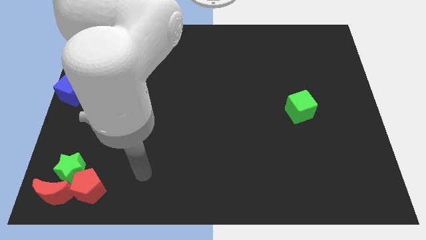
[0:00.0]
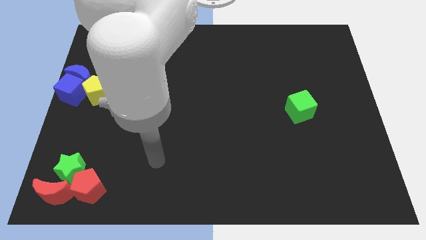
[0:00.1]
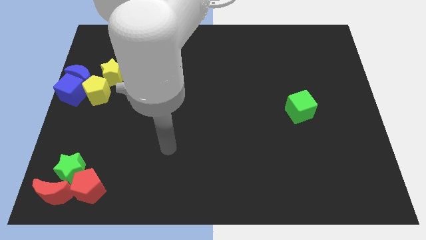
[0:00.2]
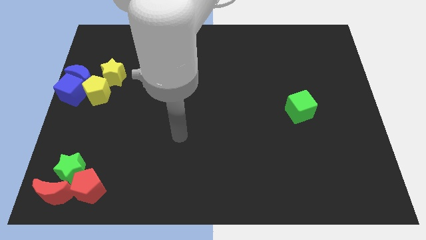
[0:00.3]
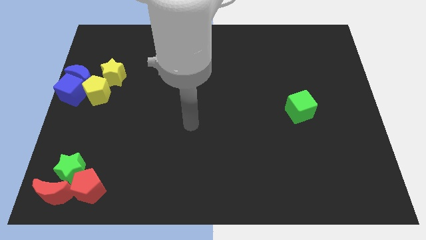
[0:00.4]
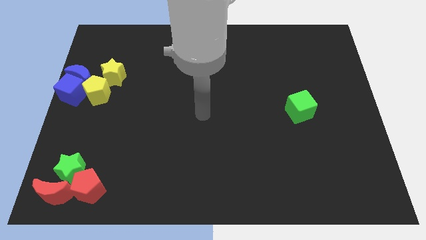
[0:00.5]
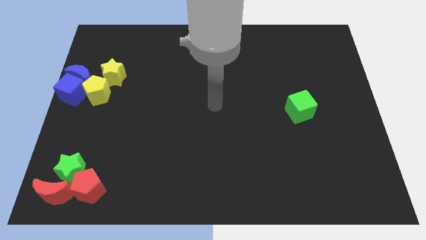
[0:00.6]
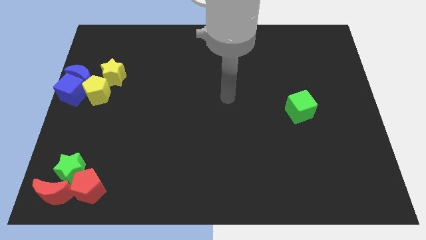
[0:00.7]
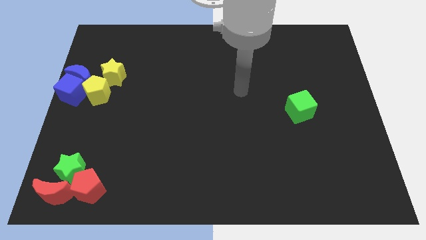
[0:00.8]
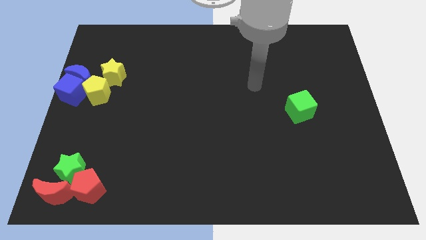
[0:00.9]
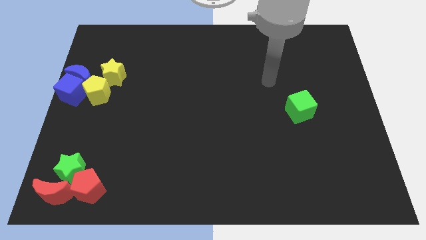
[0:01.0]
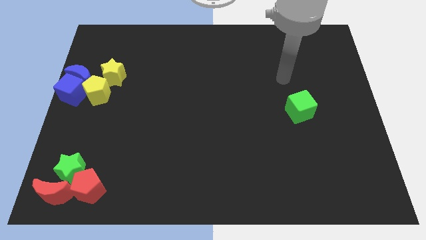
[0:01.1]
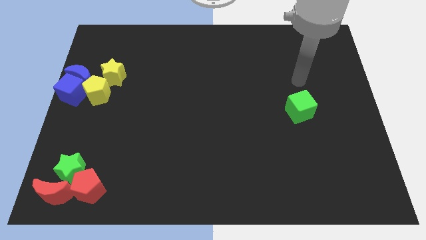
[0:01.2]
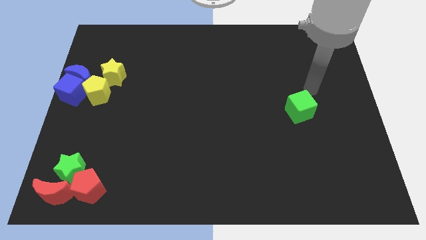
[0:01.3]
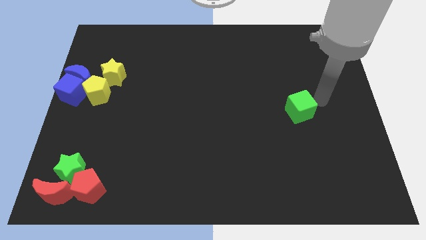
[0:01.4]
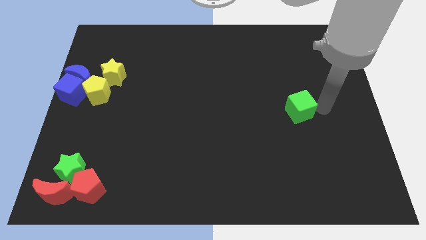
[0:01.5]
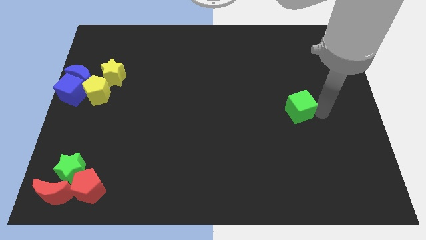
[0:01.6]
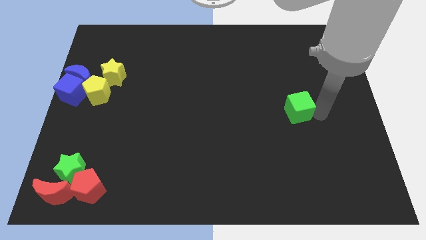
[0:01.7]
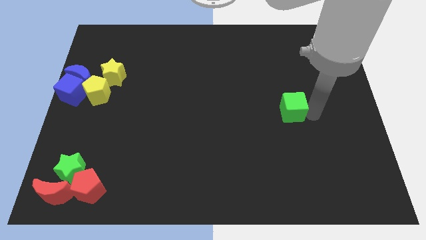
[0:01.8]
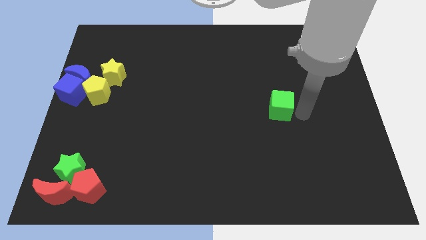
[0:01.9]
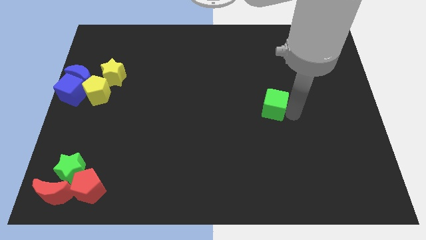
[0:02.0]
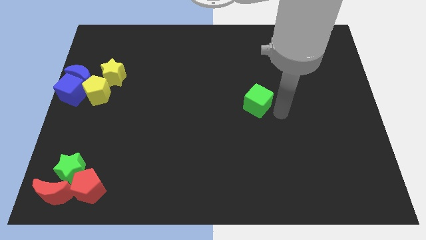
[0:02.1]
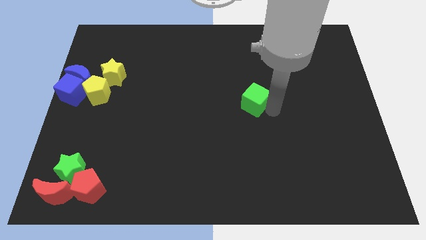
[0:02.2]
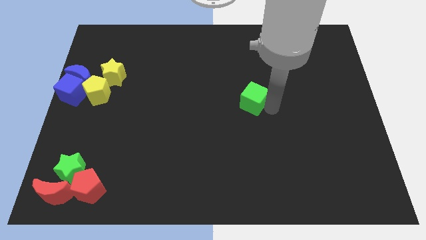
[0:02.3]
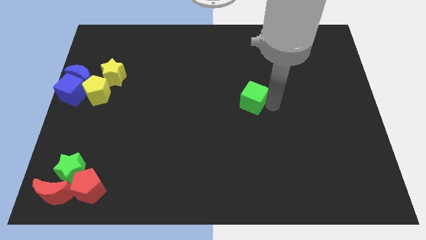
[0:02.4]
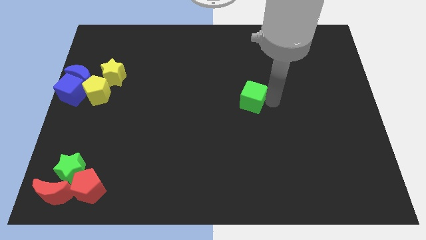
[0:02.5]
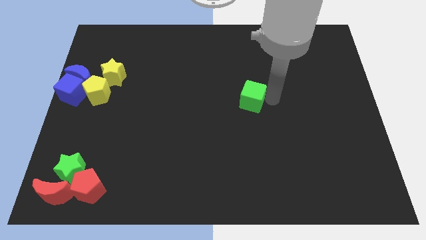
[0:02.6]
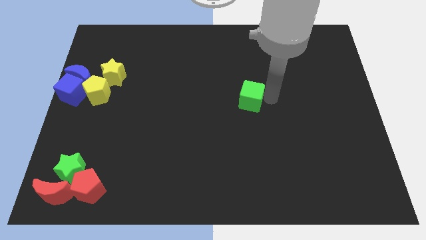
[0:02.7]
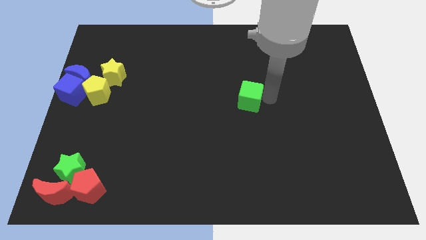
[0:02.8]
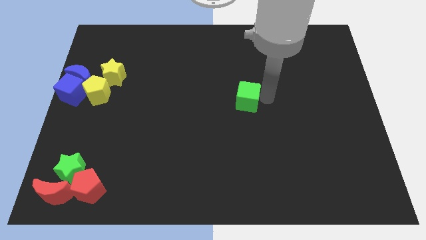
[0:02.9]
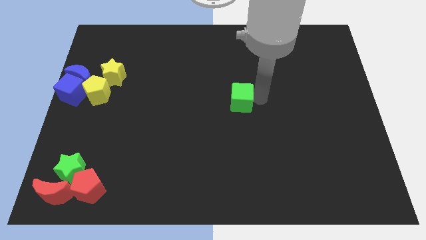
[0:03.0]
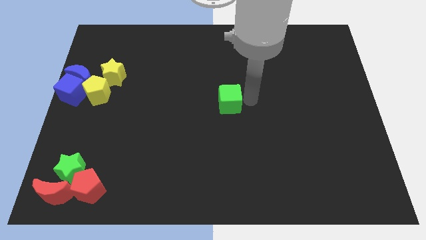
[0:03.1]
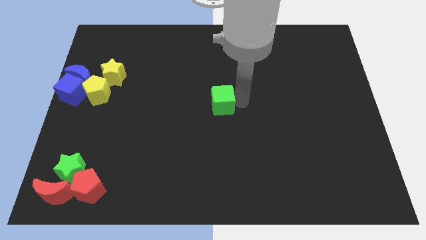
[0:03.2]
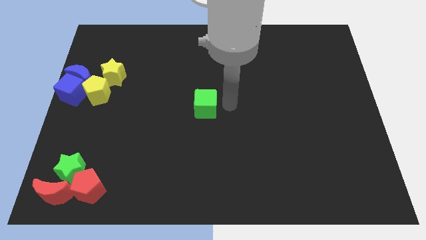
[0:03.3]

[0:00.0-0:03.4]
move the green cube to the center of the board

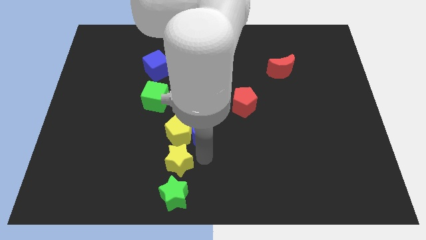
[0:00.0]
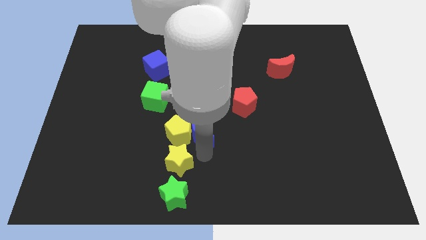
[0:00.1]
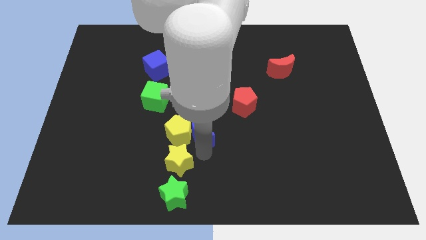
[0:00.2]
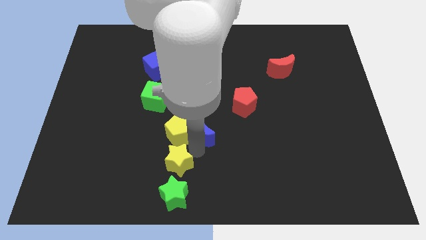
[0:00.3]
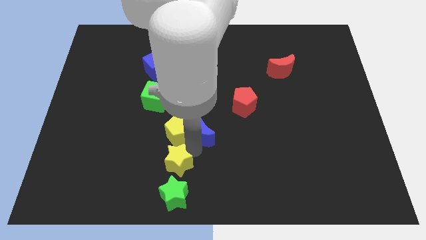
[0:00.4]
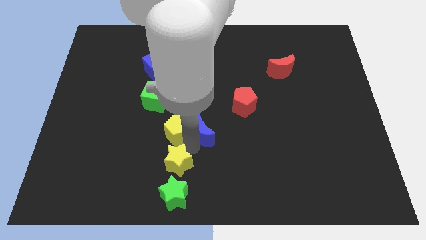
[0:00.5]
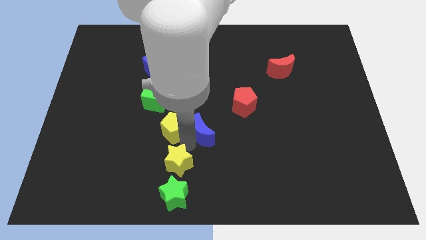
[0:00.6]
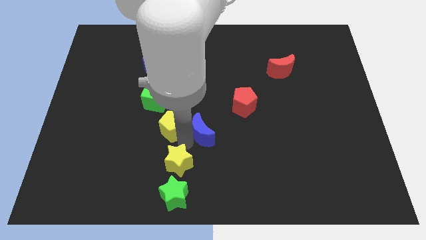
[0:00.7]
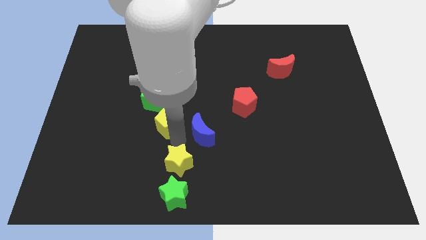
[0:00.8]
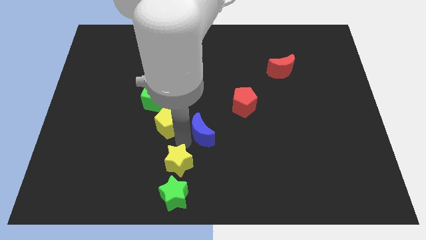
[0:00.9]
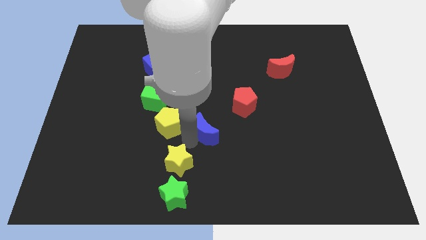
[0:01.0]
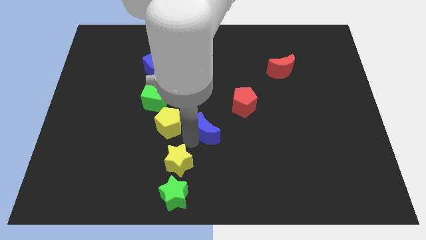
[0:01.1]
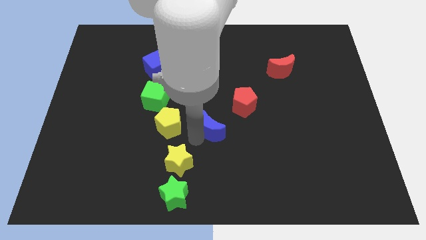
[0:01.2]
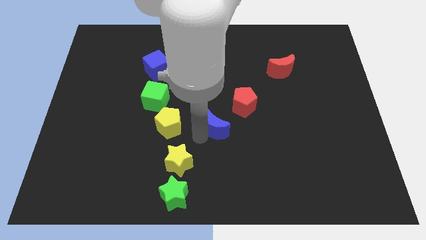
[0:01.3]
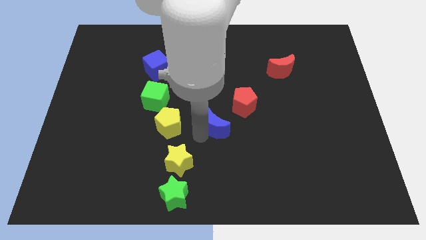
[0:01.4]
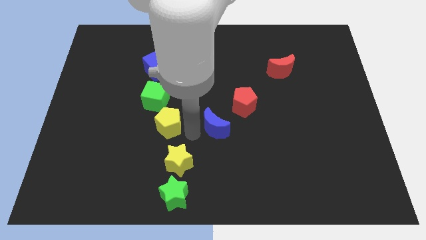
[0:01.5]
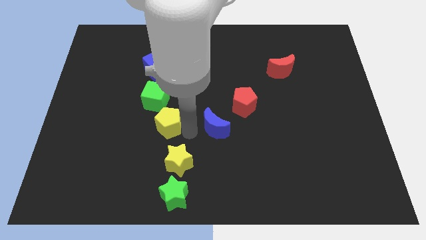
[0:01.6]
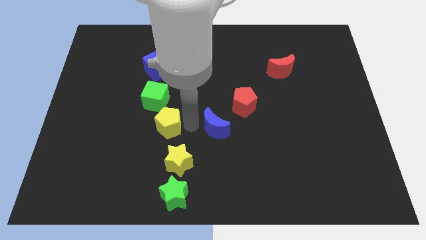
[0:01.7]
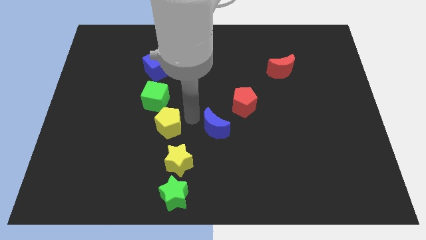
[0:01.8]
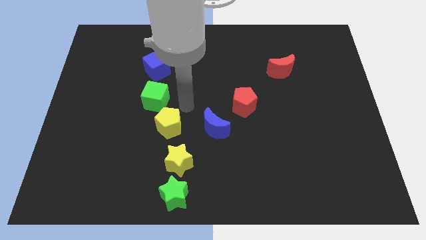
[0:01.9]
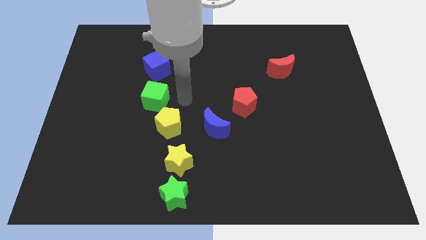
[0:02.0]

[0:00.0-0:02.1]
separate blue moon and the yellow pentagon

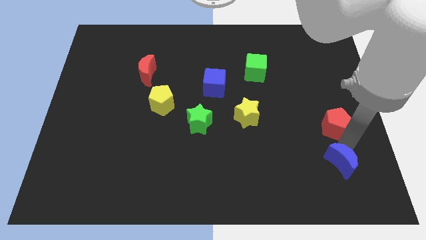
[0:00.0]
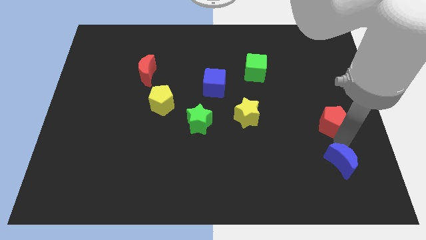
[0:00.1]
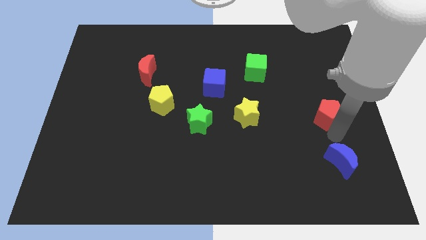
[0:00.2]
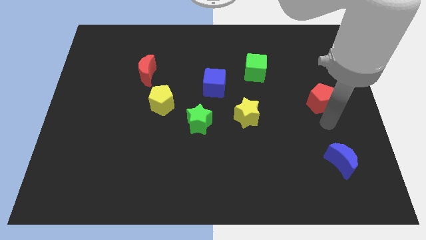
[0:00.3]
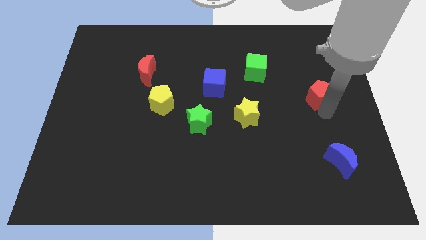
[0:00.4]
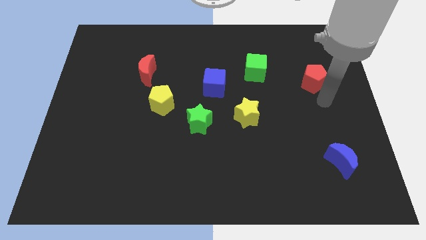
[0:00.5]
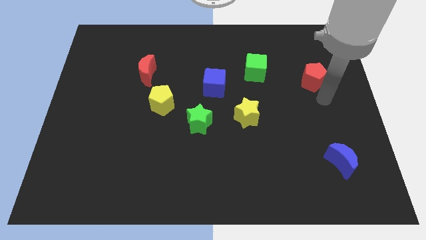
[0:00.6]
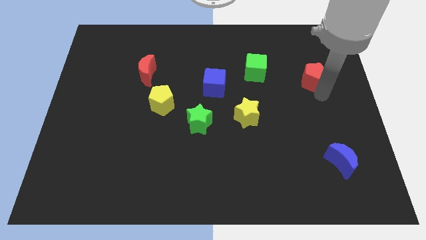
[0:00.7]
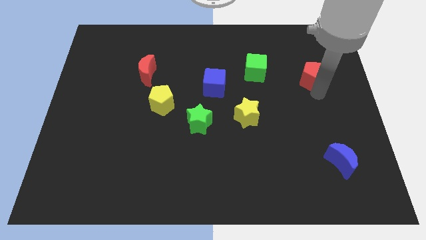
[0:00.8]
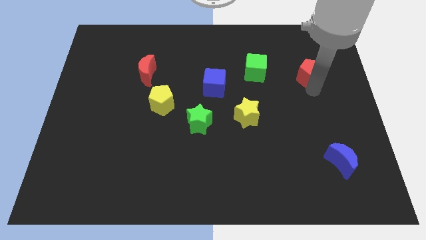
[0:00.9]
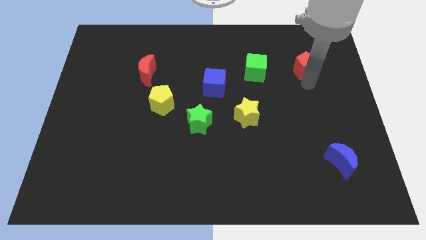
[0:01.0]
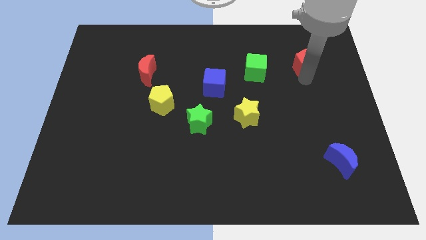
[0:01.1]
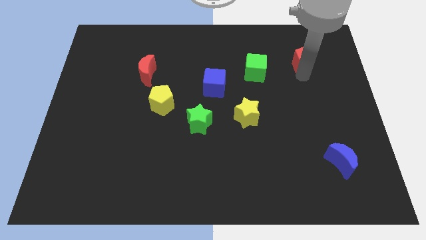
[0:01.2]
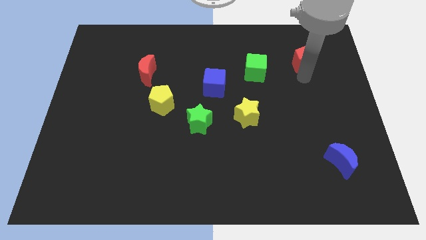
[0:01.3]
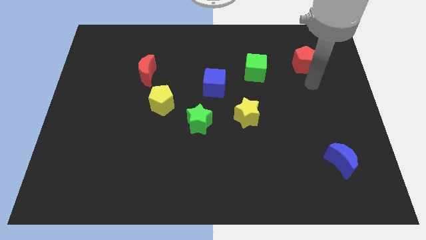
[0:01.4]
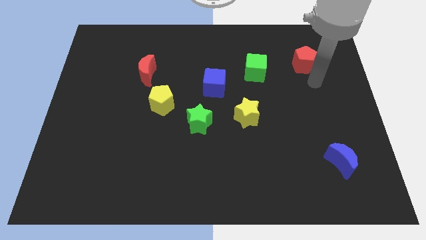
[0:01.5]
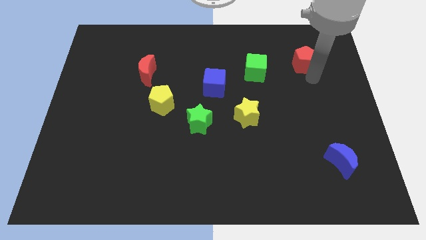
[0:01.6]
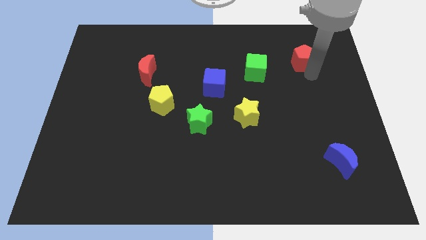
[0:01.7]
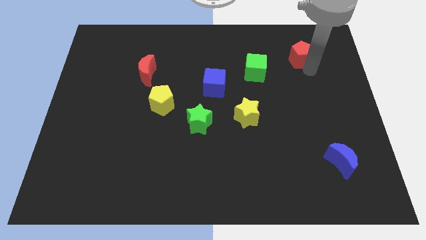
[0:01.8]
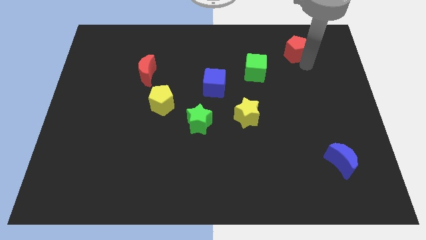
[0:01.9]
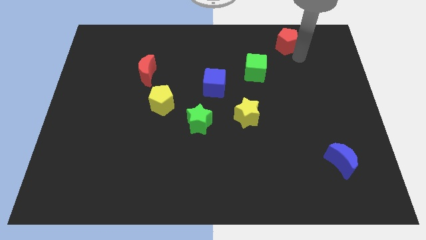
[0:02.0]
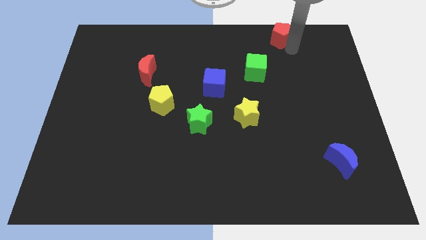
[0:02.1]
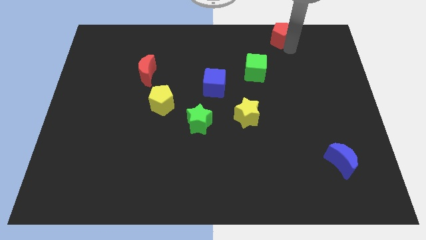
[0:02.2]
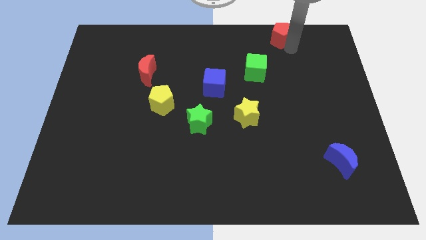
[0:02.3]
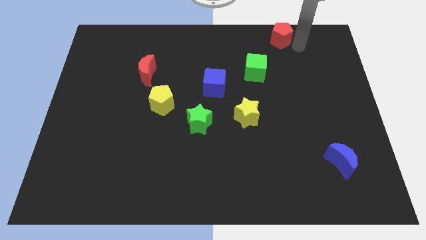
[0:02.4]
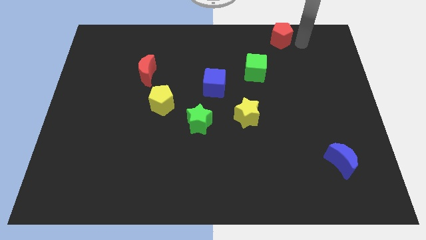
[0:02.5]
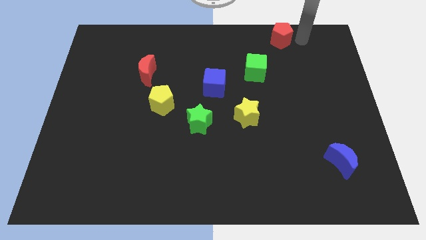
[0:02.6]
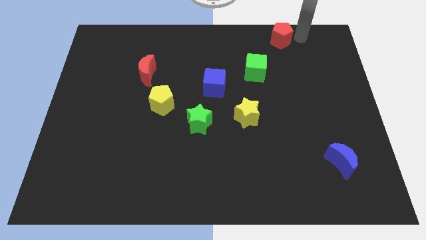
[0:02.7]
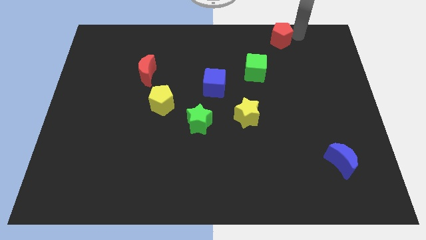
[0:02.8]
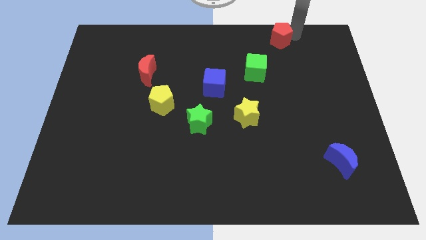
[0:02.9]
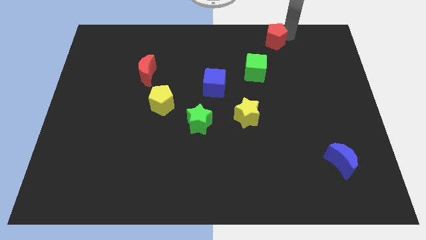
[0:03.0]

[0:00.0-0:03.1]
push the red pentagon to the top right of the green cube

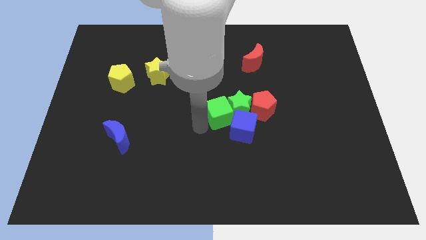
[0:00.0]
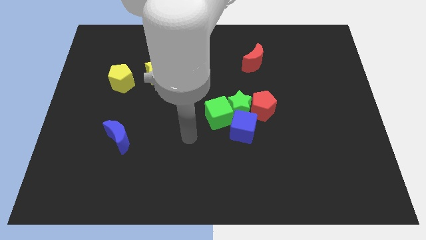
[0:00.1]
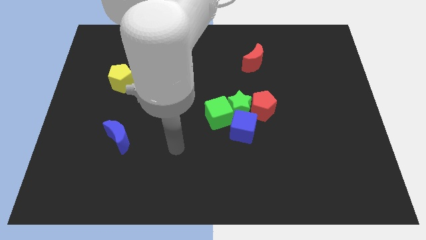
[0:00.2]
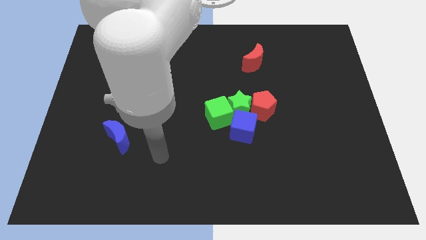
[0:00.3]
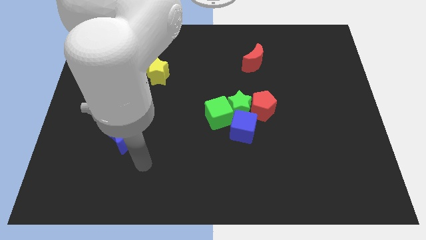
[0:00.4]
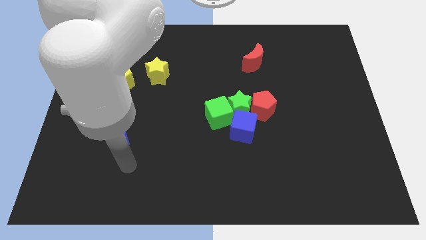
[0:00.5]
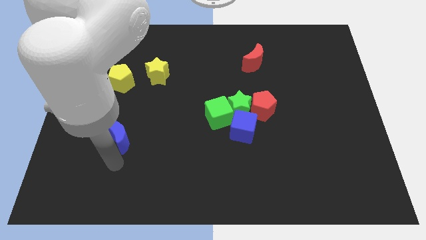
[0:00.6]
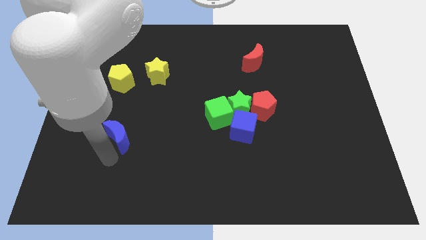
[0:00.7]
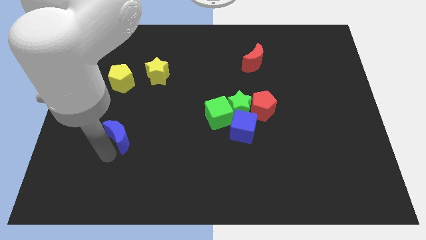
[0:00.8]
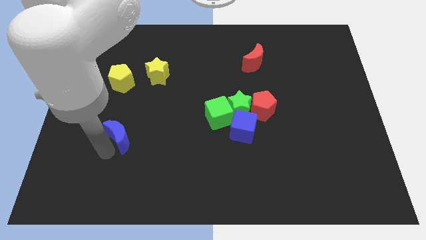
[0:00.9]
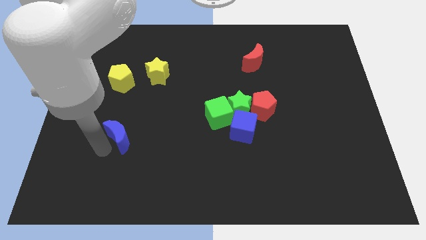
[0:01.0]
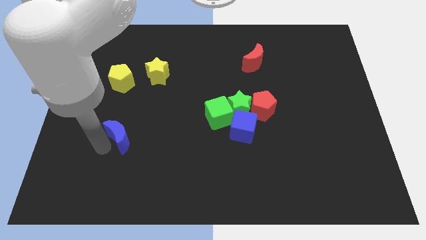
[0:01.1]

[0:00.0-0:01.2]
move the arm towards the blue crescent
